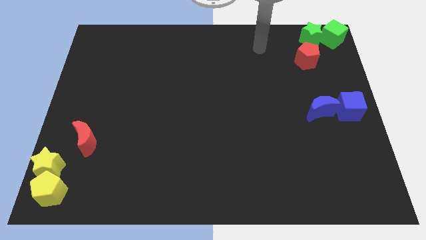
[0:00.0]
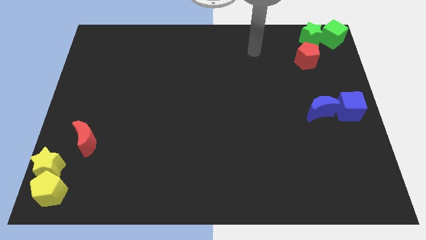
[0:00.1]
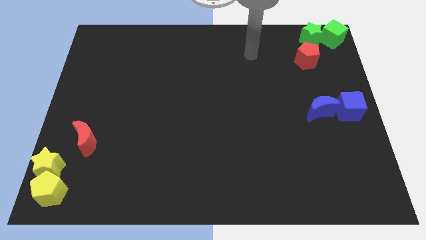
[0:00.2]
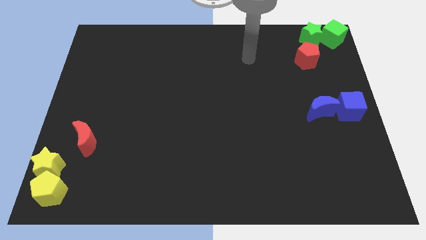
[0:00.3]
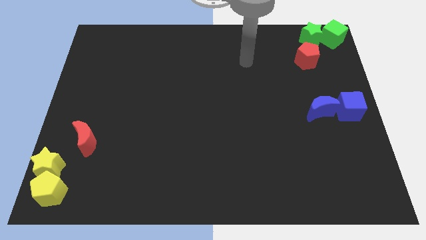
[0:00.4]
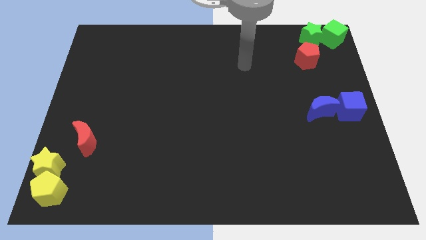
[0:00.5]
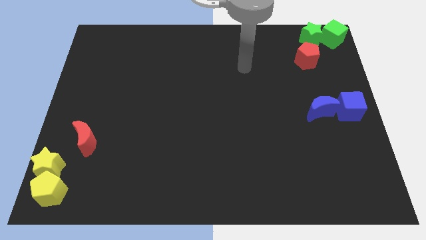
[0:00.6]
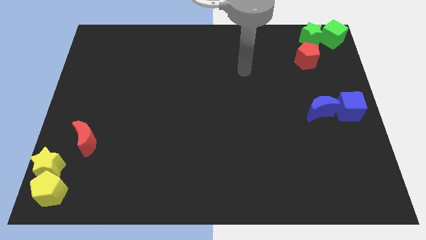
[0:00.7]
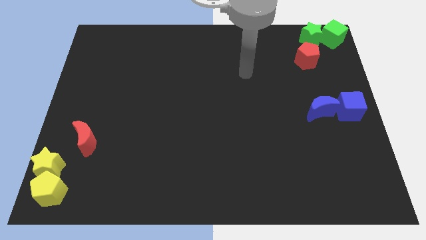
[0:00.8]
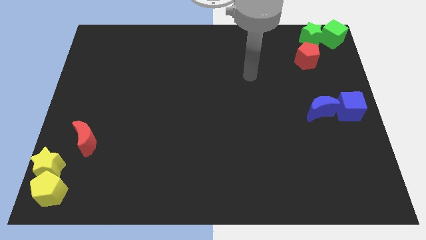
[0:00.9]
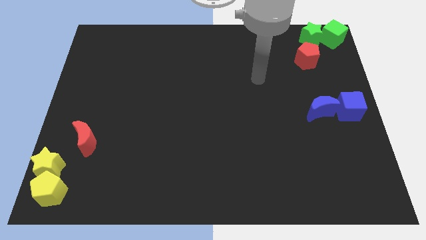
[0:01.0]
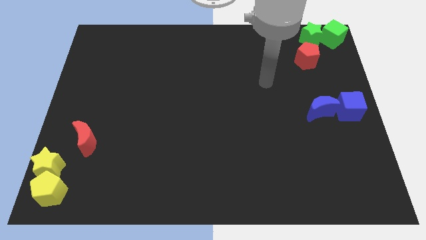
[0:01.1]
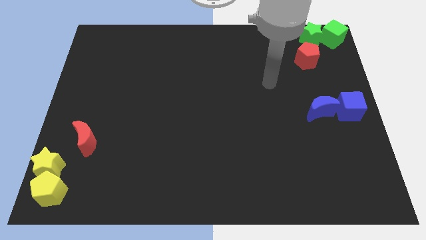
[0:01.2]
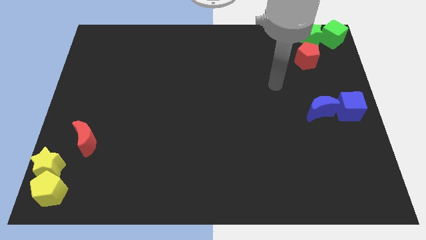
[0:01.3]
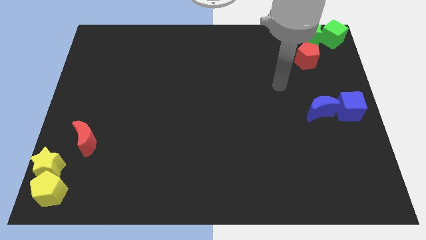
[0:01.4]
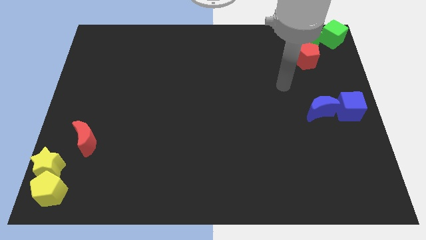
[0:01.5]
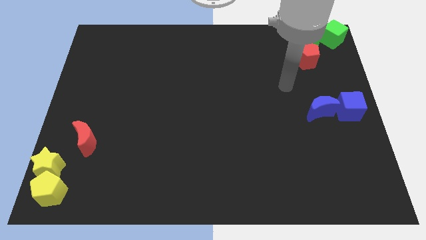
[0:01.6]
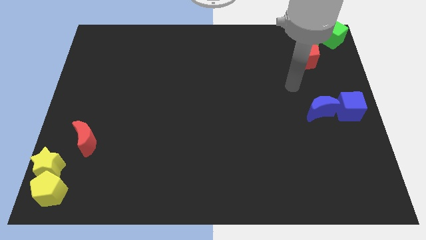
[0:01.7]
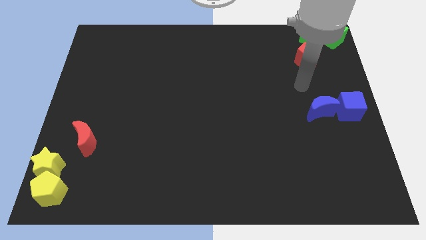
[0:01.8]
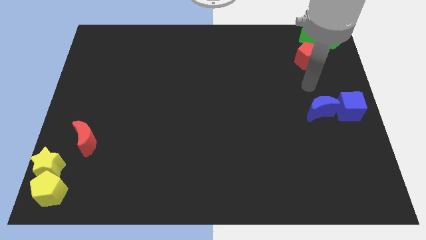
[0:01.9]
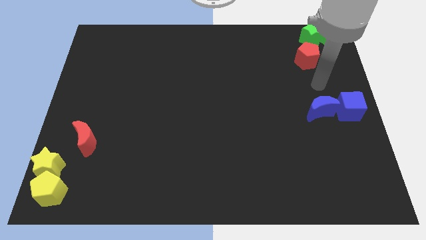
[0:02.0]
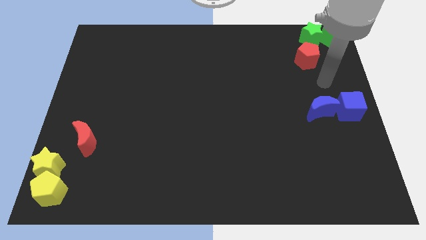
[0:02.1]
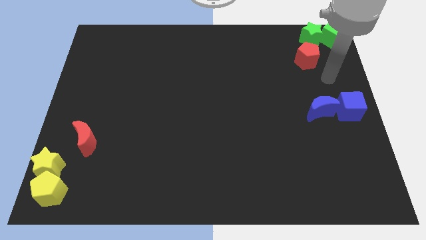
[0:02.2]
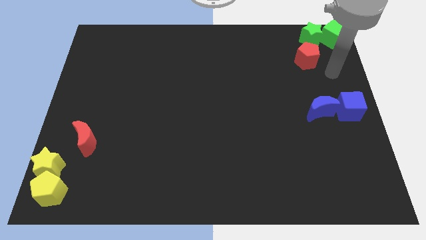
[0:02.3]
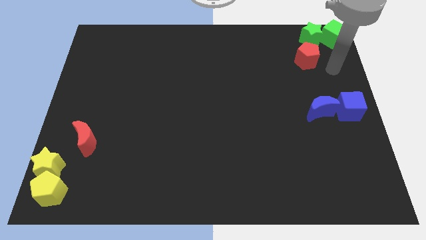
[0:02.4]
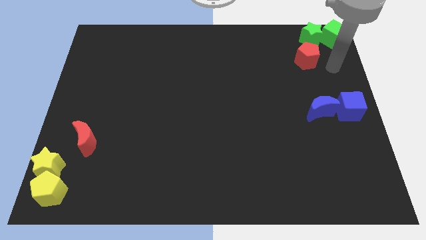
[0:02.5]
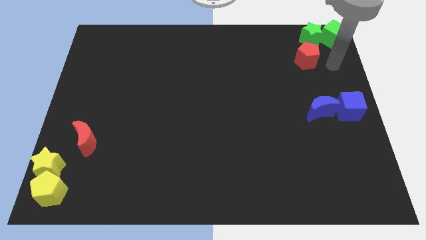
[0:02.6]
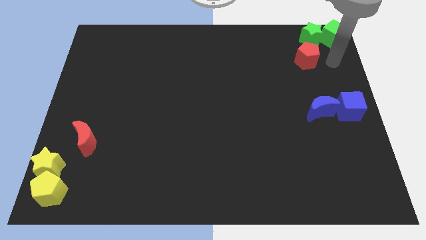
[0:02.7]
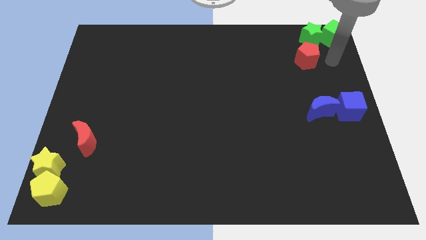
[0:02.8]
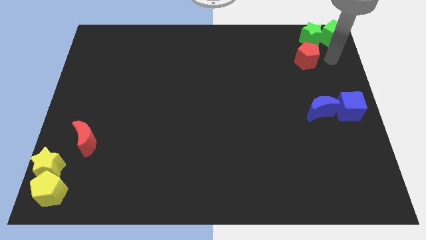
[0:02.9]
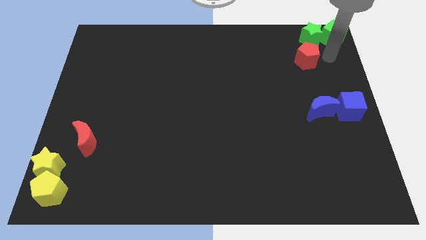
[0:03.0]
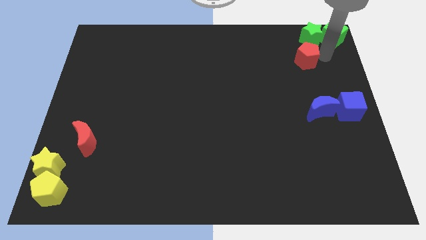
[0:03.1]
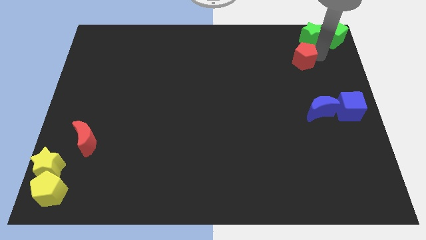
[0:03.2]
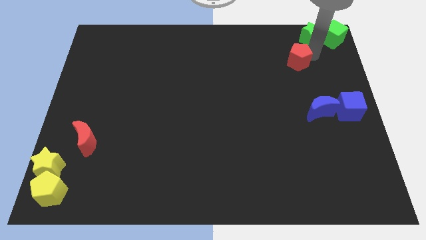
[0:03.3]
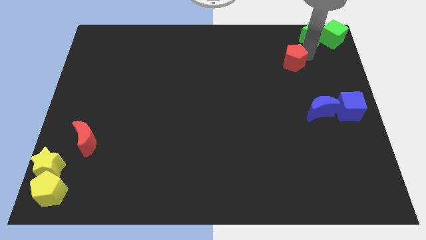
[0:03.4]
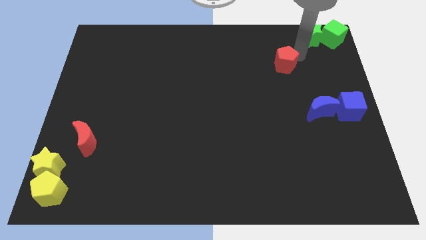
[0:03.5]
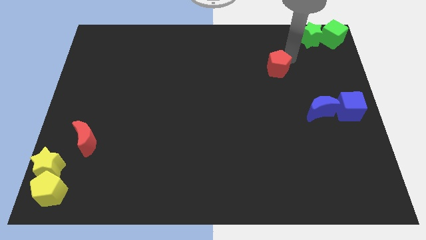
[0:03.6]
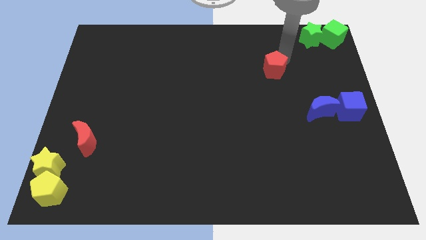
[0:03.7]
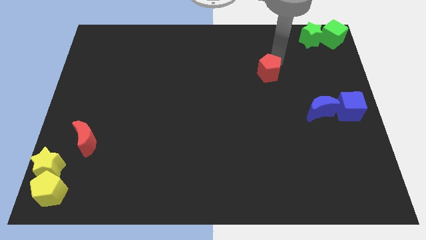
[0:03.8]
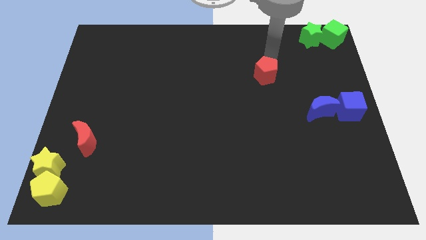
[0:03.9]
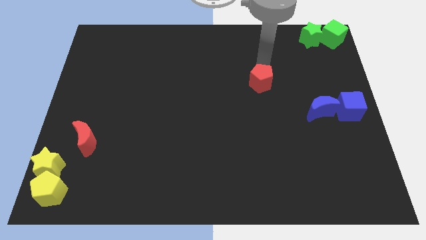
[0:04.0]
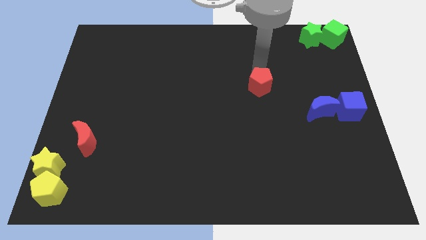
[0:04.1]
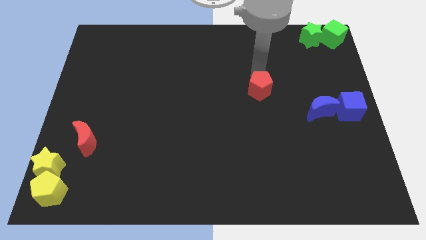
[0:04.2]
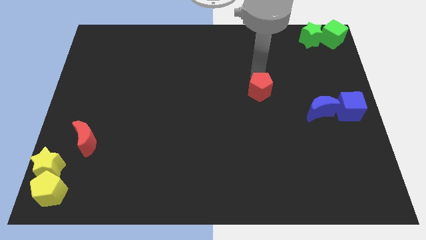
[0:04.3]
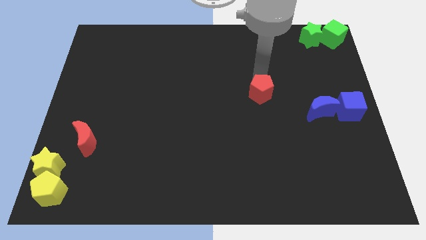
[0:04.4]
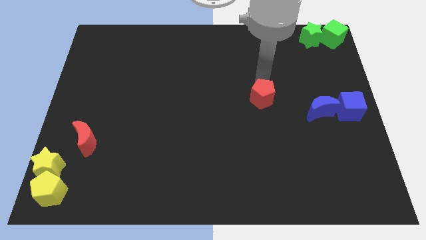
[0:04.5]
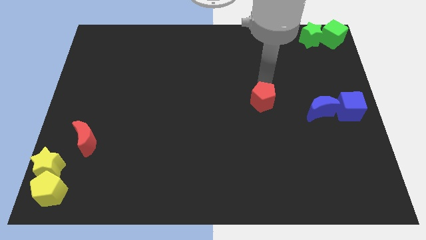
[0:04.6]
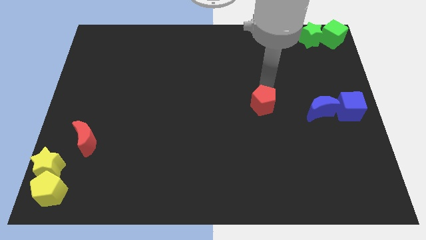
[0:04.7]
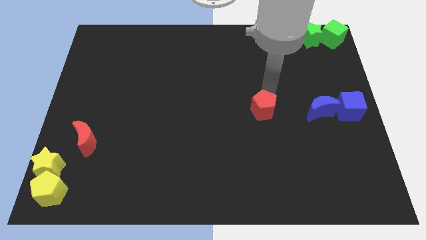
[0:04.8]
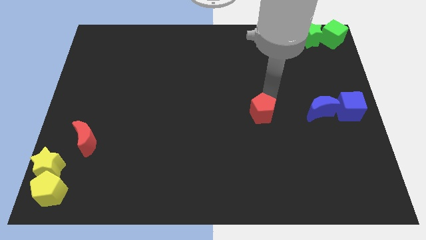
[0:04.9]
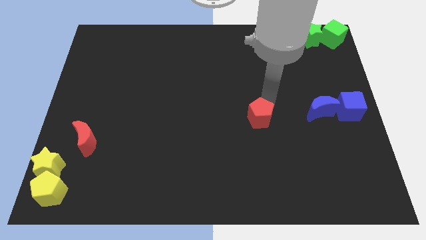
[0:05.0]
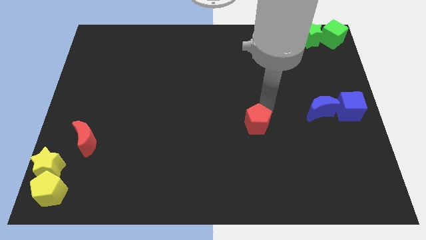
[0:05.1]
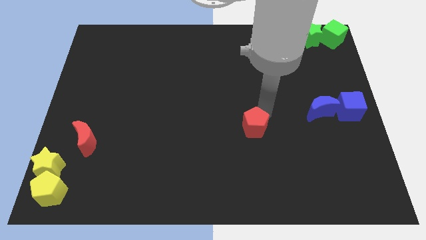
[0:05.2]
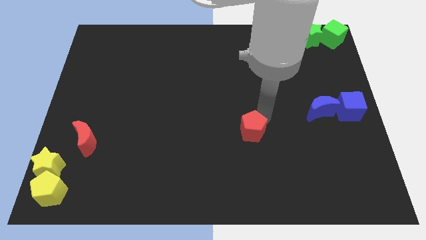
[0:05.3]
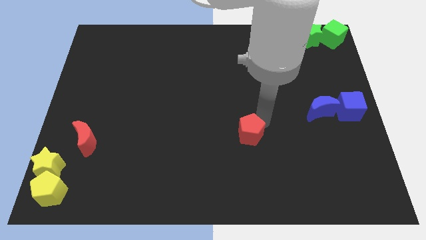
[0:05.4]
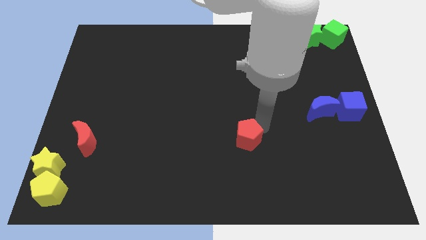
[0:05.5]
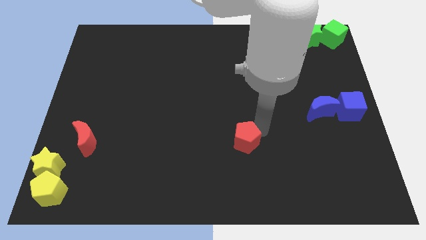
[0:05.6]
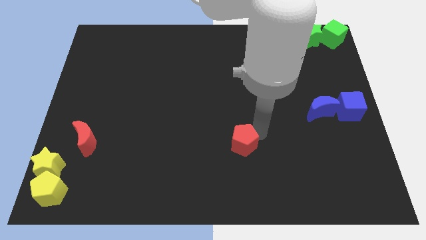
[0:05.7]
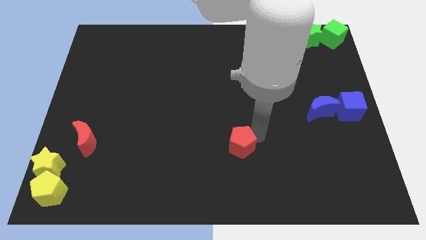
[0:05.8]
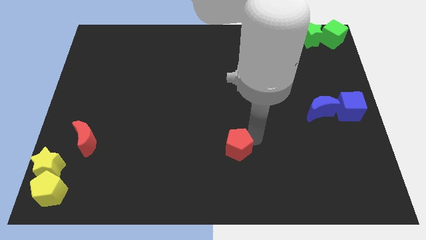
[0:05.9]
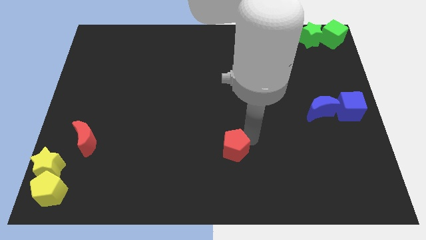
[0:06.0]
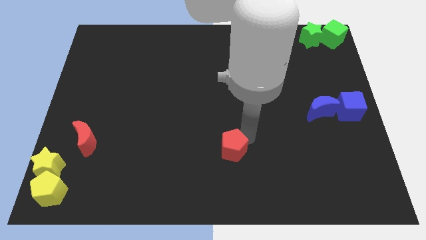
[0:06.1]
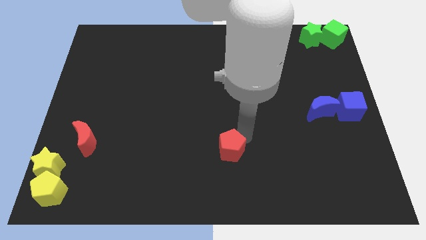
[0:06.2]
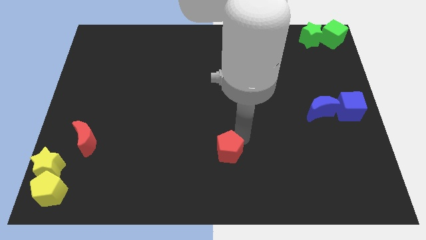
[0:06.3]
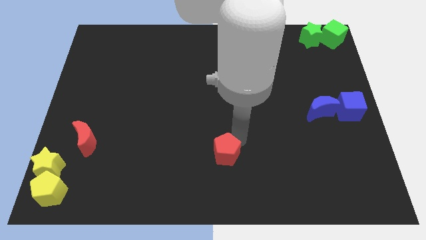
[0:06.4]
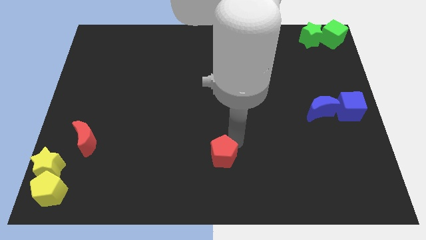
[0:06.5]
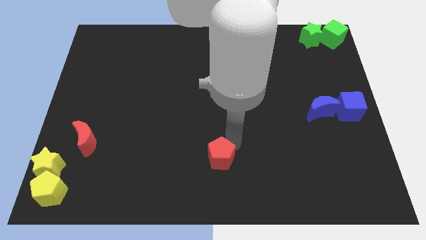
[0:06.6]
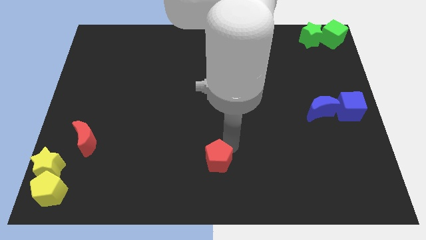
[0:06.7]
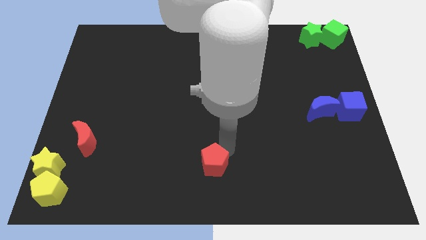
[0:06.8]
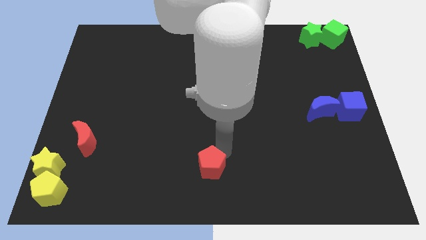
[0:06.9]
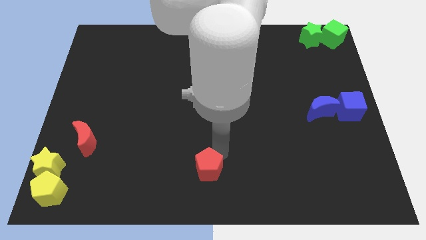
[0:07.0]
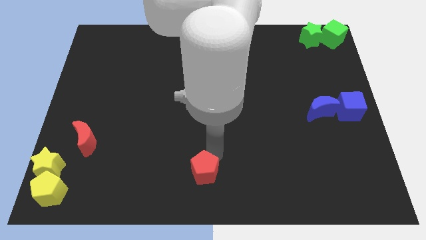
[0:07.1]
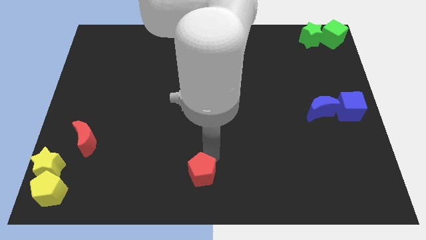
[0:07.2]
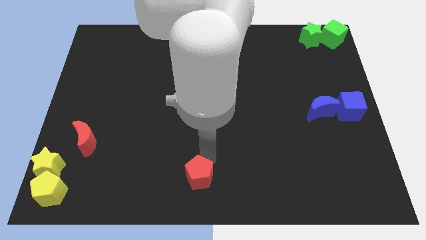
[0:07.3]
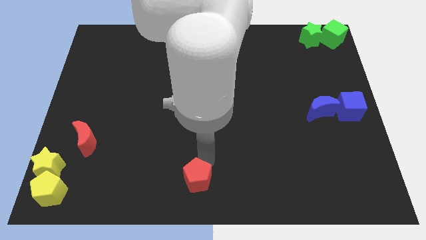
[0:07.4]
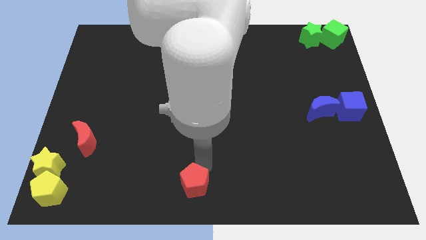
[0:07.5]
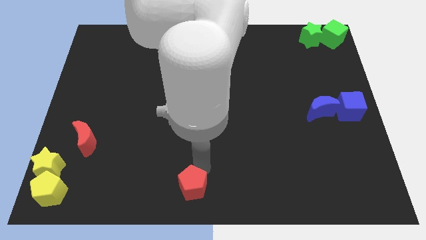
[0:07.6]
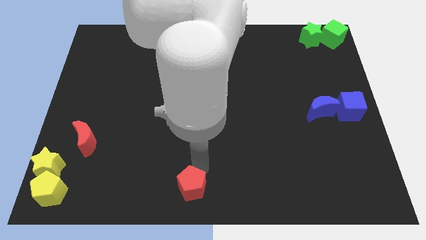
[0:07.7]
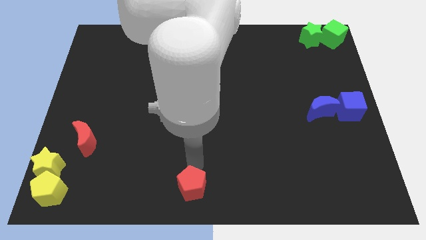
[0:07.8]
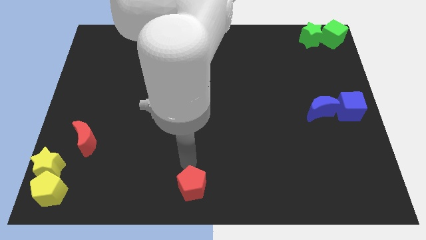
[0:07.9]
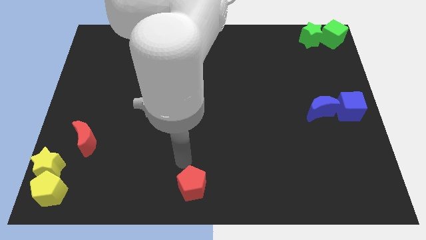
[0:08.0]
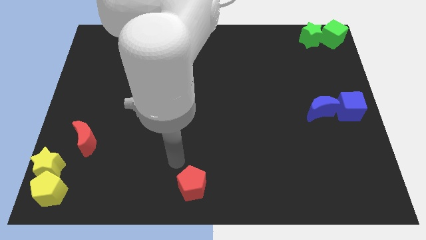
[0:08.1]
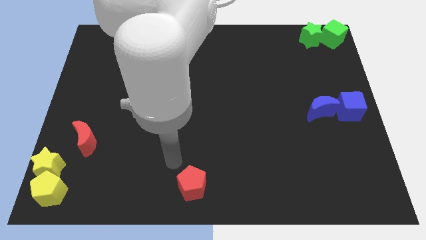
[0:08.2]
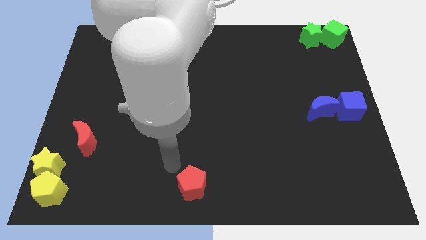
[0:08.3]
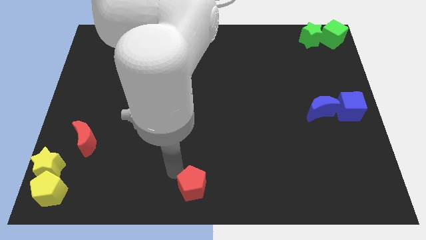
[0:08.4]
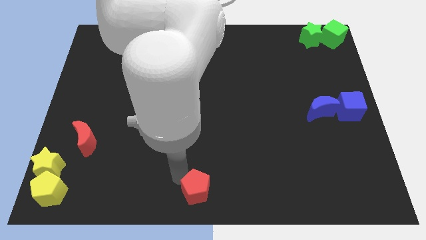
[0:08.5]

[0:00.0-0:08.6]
place the red pentagon to the bottom center of the board

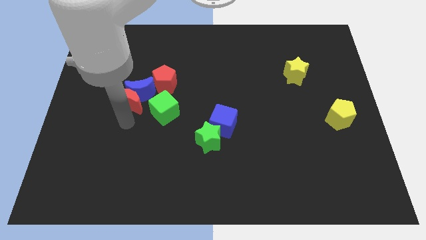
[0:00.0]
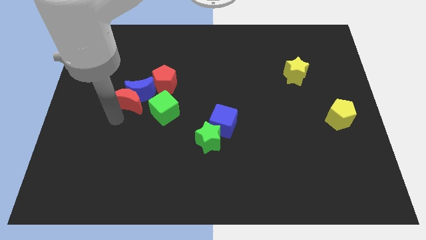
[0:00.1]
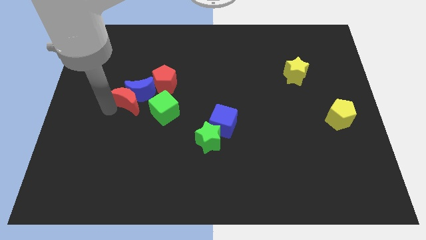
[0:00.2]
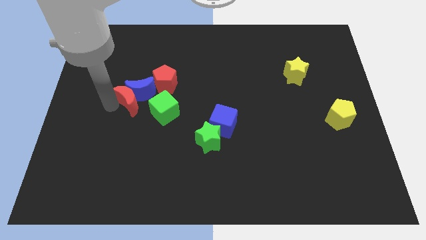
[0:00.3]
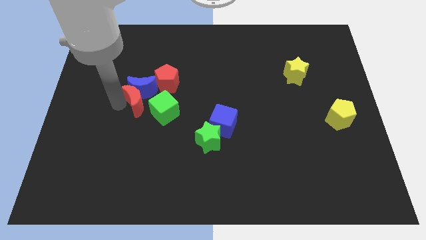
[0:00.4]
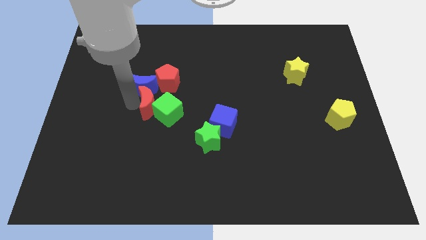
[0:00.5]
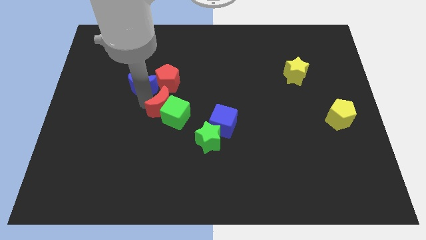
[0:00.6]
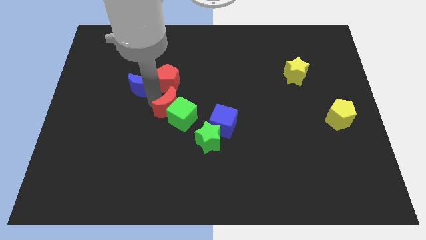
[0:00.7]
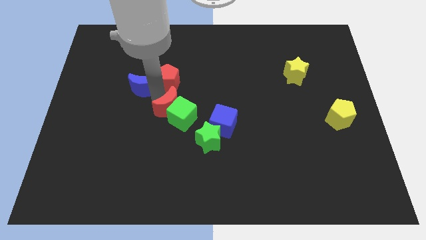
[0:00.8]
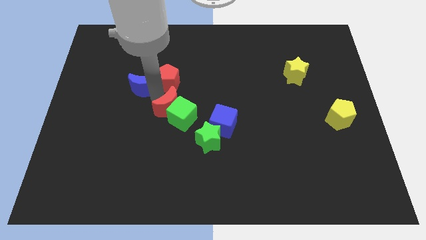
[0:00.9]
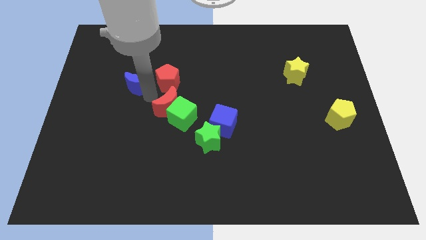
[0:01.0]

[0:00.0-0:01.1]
push the red crescent into the green cube
